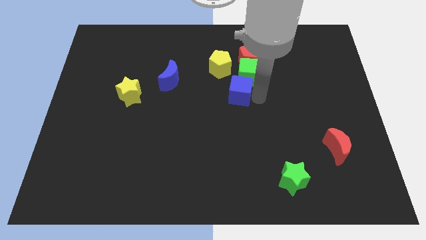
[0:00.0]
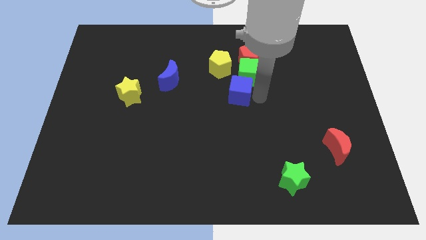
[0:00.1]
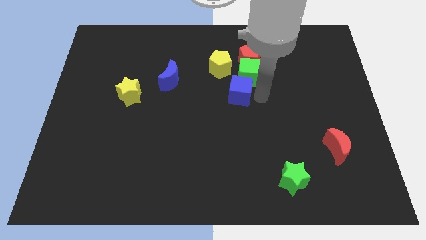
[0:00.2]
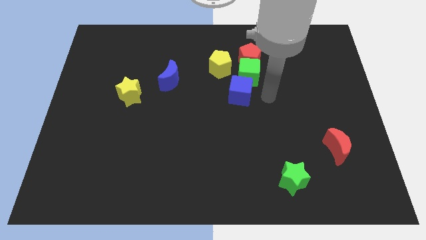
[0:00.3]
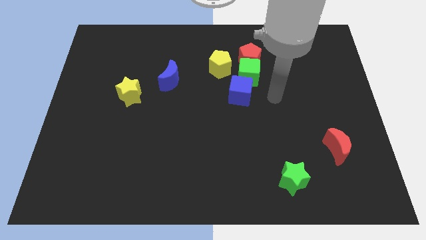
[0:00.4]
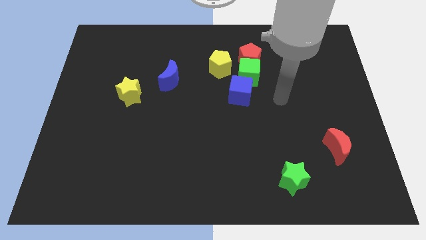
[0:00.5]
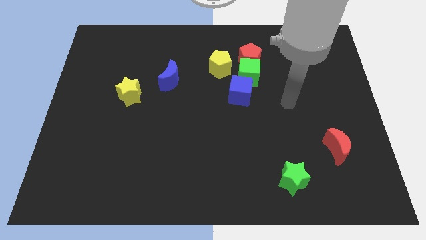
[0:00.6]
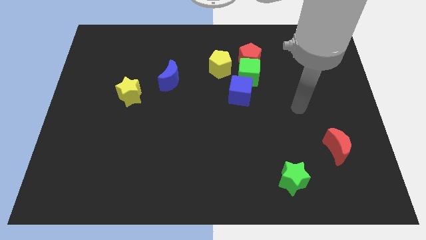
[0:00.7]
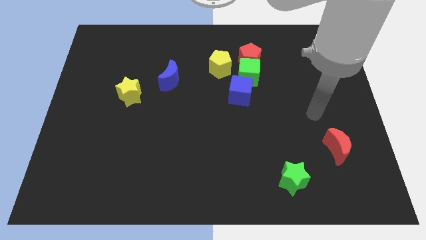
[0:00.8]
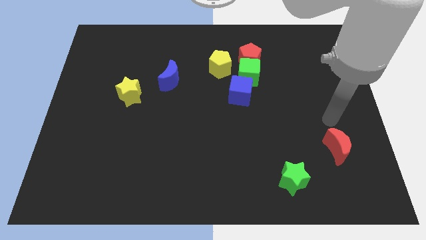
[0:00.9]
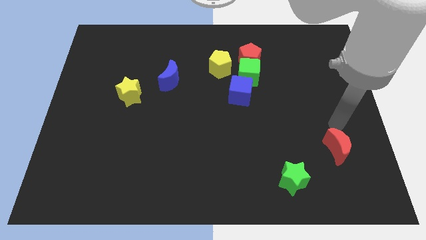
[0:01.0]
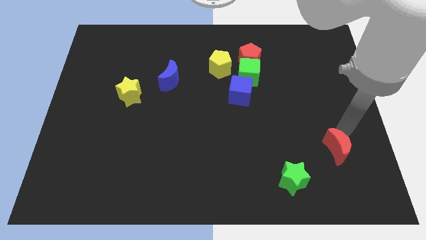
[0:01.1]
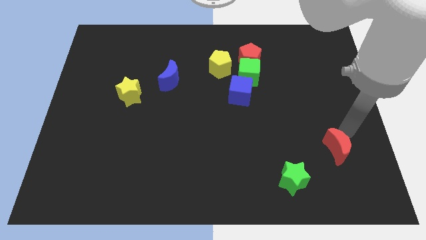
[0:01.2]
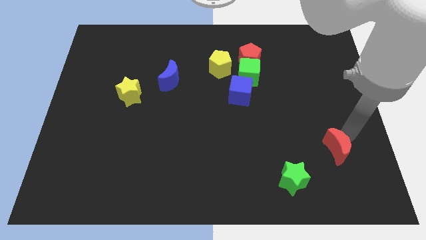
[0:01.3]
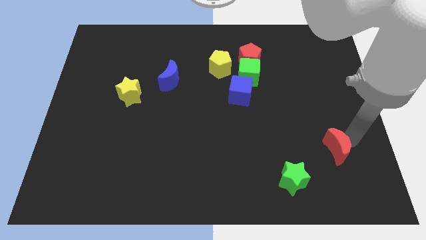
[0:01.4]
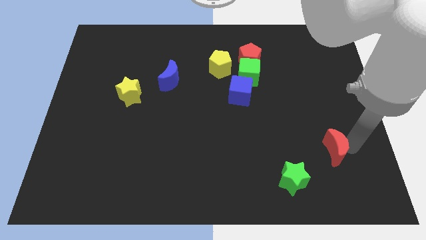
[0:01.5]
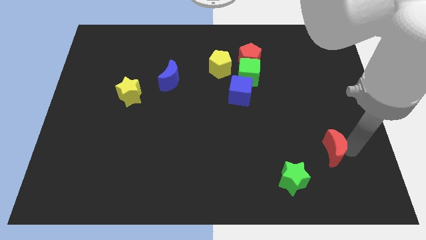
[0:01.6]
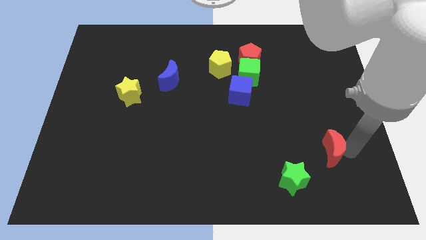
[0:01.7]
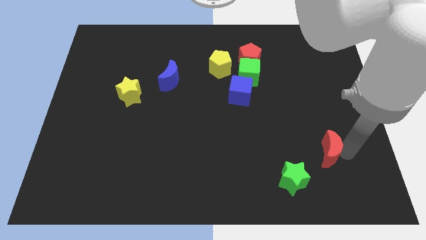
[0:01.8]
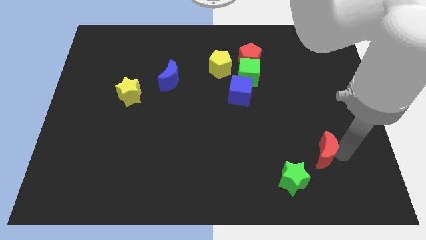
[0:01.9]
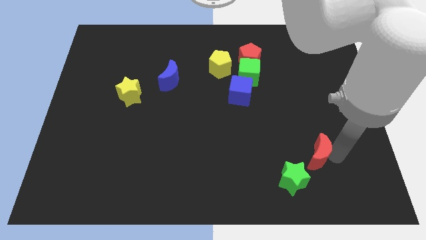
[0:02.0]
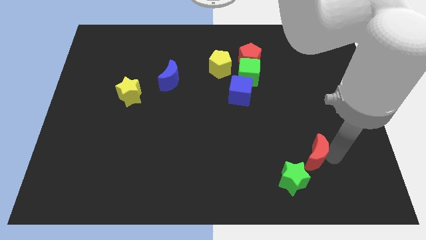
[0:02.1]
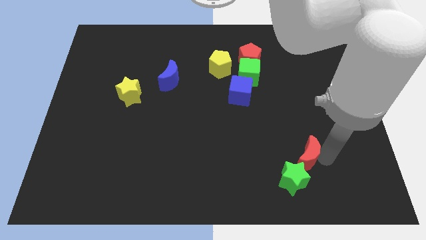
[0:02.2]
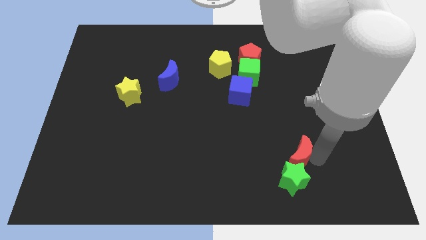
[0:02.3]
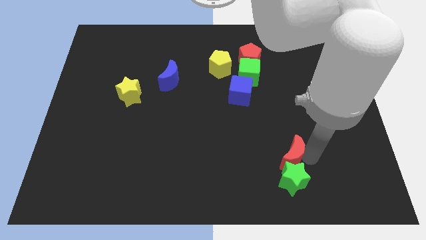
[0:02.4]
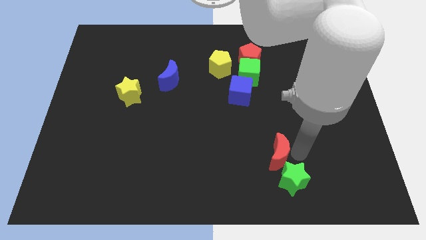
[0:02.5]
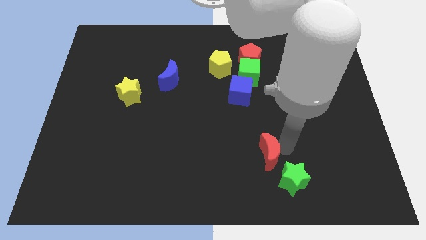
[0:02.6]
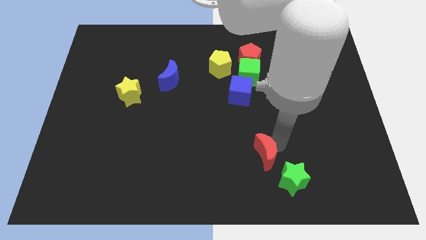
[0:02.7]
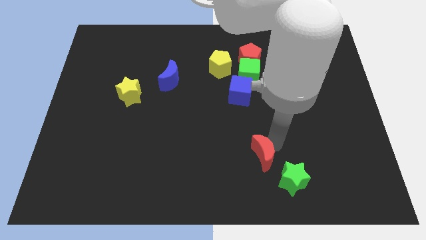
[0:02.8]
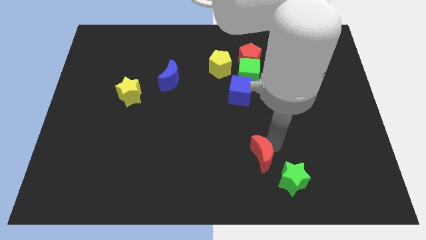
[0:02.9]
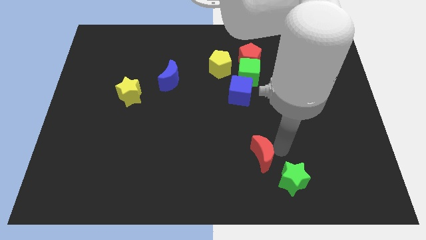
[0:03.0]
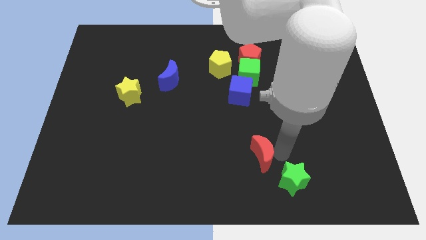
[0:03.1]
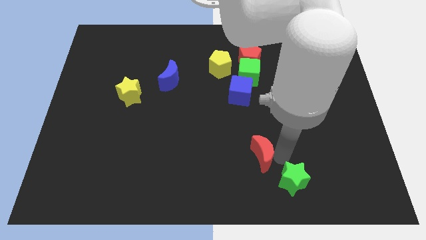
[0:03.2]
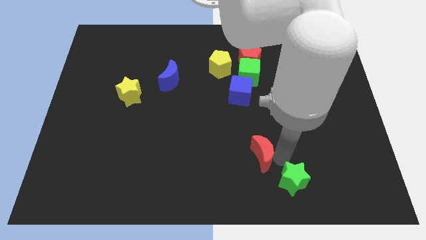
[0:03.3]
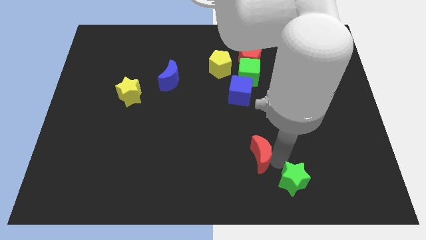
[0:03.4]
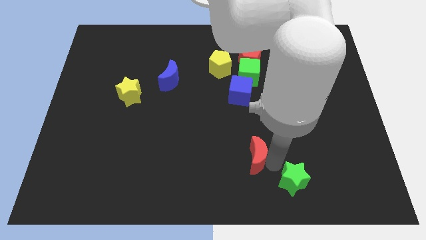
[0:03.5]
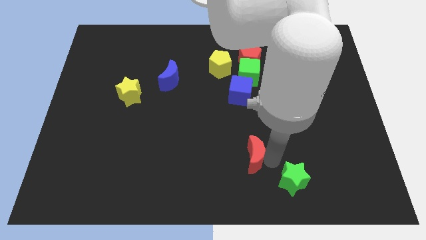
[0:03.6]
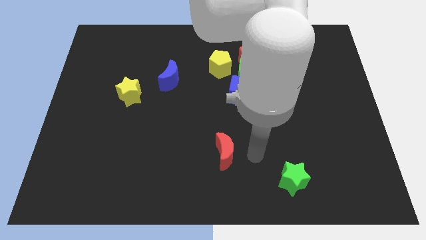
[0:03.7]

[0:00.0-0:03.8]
place the red moon below the blue cube

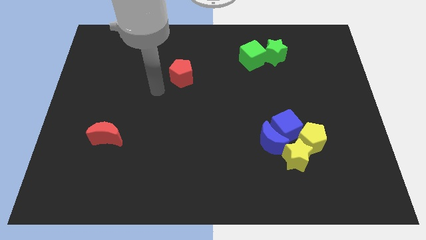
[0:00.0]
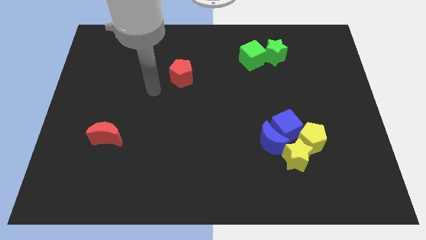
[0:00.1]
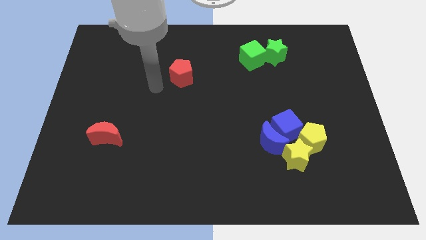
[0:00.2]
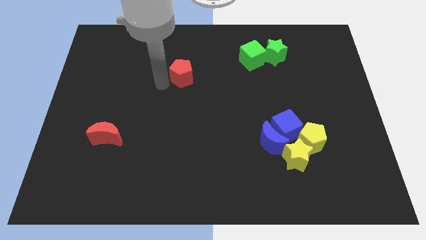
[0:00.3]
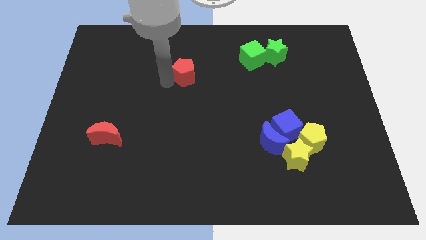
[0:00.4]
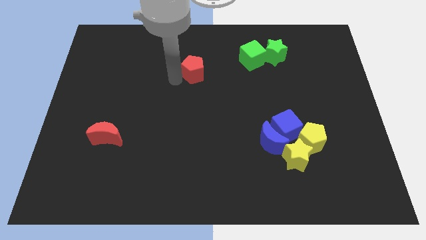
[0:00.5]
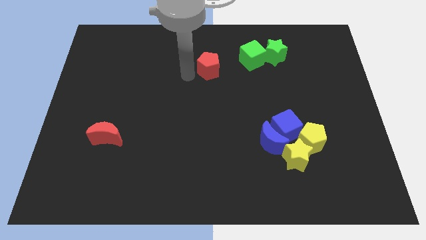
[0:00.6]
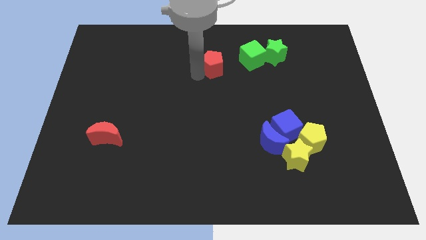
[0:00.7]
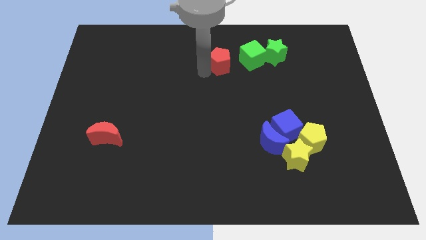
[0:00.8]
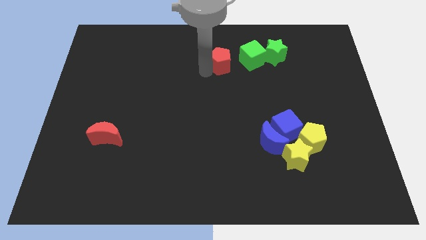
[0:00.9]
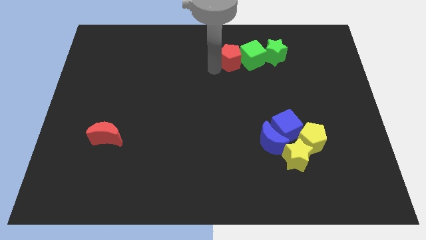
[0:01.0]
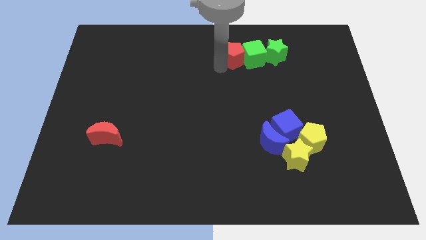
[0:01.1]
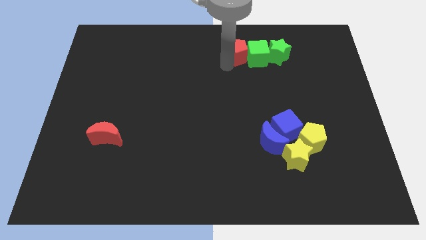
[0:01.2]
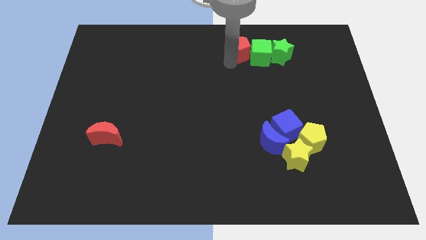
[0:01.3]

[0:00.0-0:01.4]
move the red pentagon parallel left to the green cube

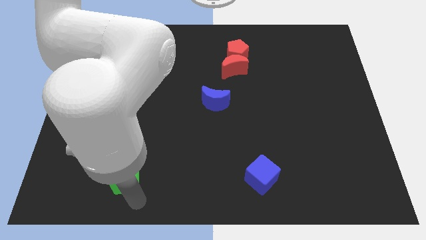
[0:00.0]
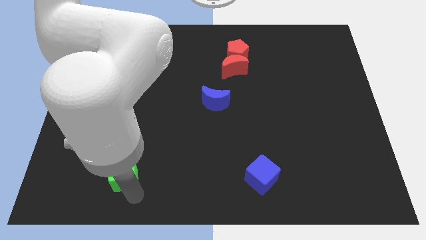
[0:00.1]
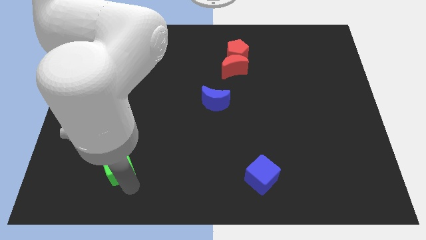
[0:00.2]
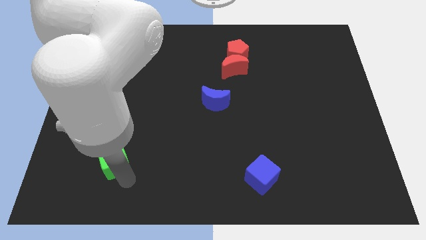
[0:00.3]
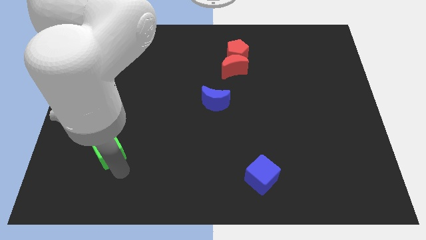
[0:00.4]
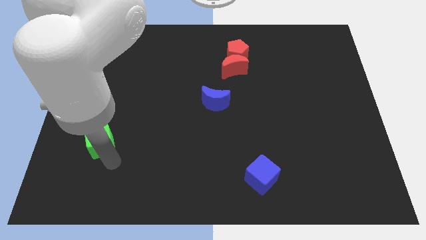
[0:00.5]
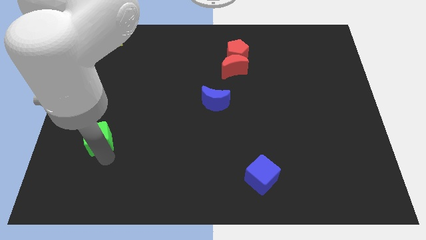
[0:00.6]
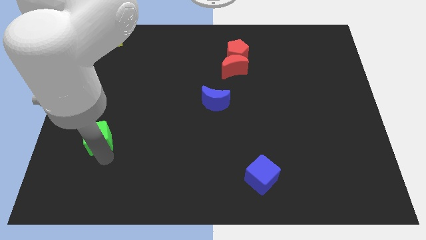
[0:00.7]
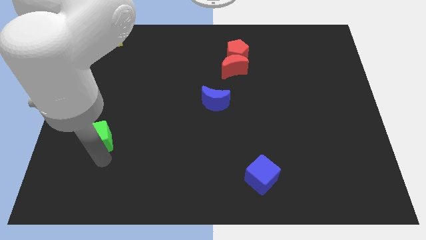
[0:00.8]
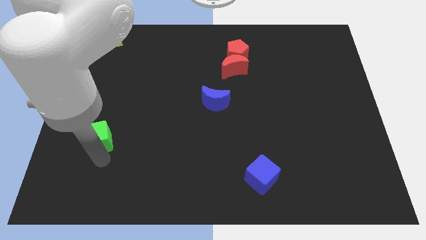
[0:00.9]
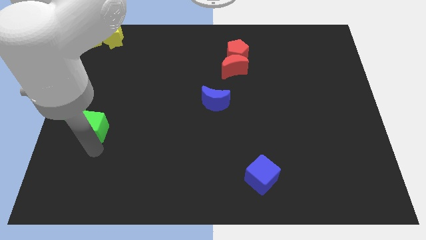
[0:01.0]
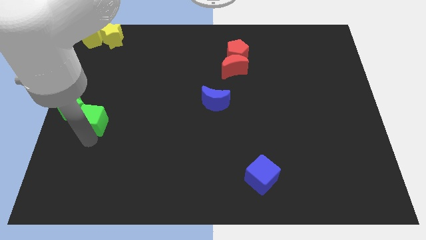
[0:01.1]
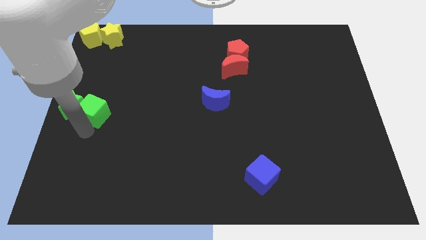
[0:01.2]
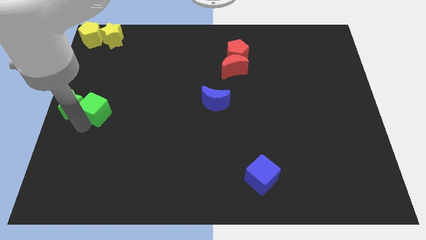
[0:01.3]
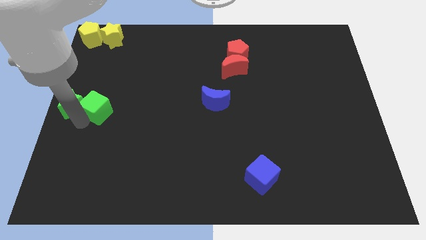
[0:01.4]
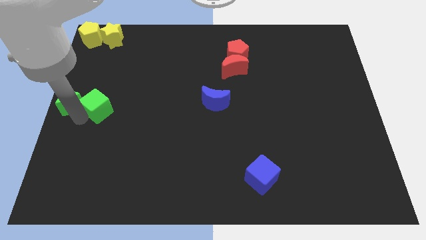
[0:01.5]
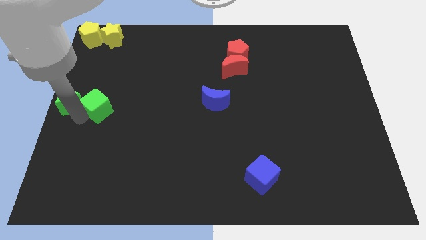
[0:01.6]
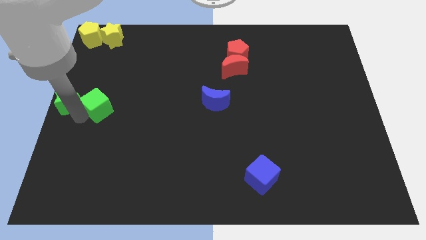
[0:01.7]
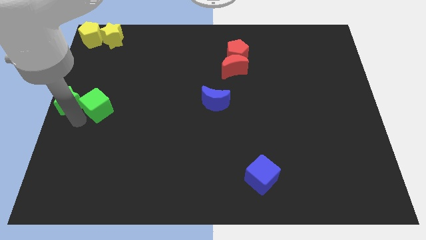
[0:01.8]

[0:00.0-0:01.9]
move the green cube to the right of green star

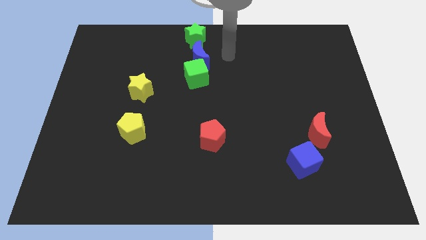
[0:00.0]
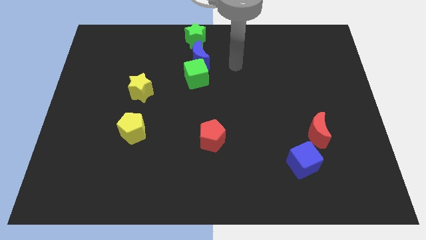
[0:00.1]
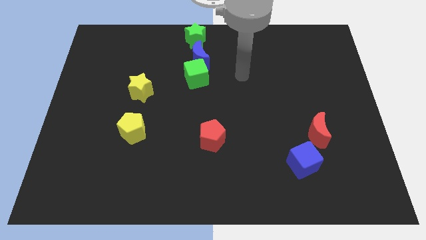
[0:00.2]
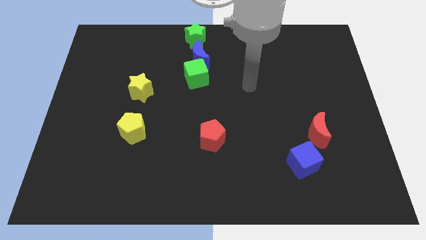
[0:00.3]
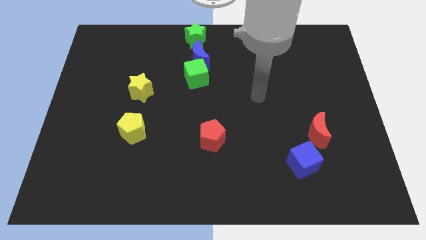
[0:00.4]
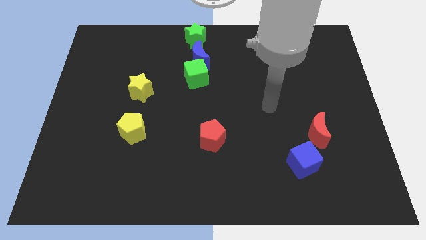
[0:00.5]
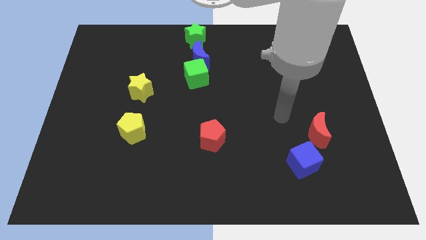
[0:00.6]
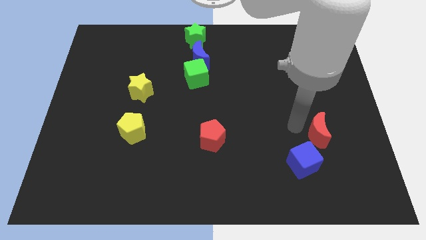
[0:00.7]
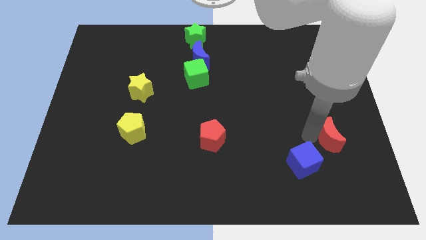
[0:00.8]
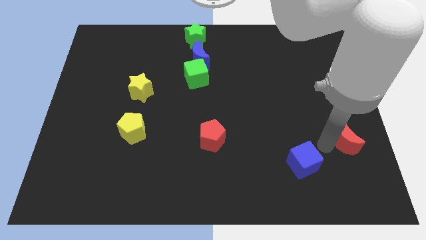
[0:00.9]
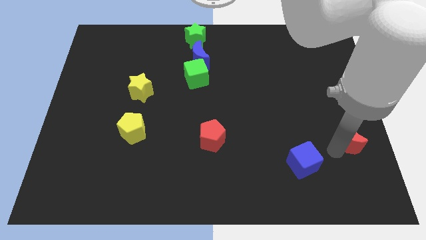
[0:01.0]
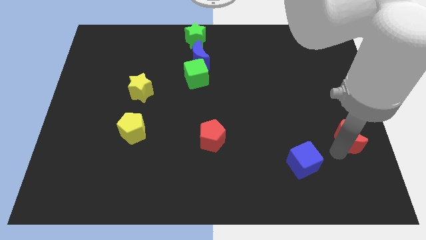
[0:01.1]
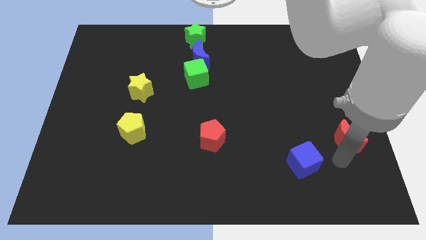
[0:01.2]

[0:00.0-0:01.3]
separate red moon from blue cube

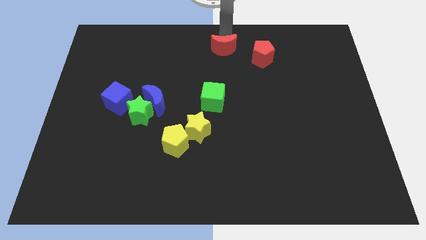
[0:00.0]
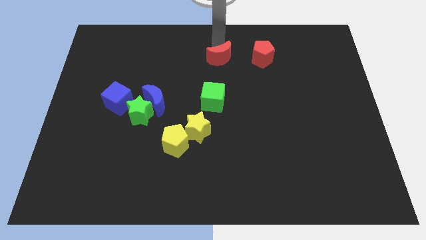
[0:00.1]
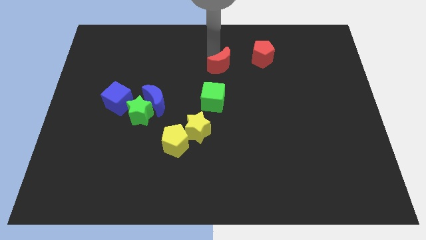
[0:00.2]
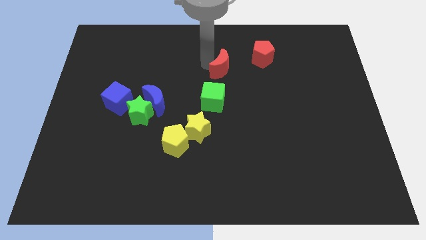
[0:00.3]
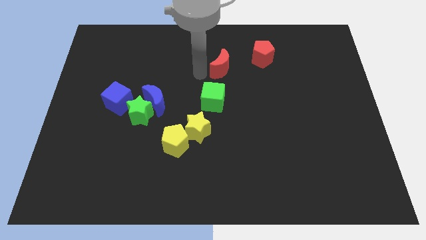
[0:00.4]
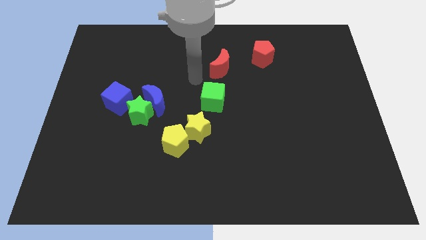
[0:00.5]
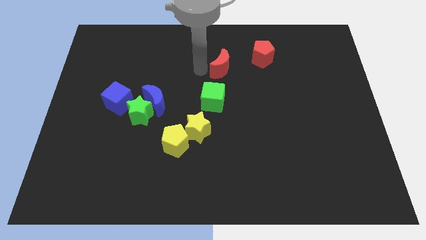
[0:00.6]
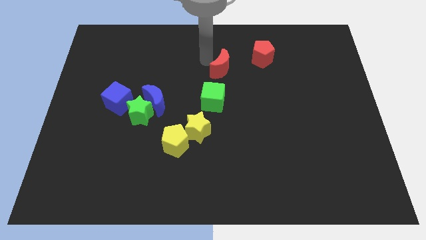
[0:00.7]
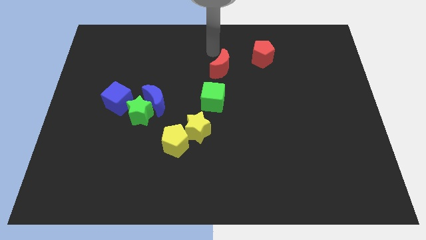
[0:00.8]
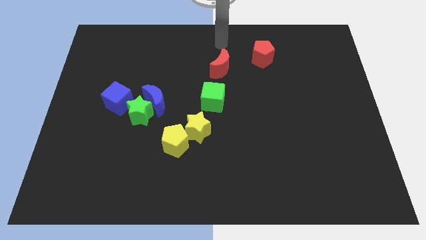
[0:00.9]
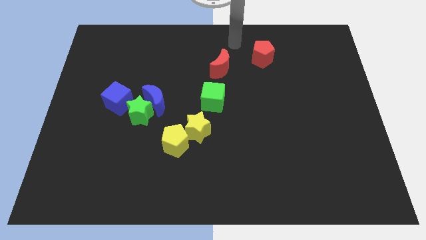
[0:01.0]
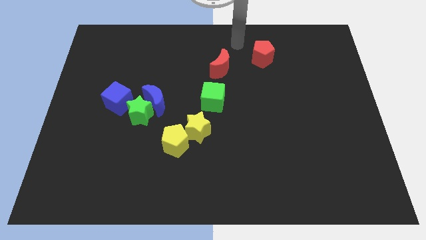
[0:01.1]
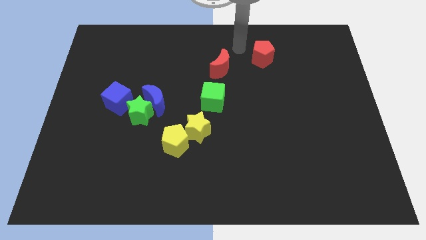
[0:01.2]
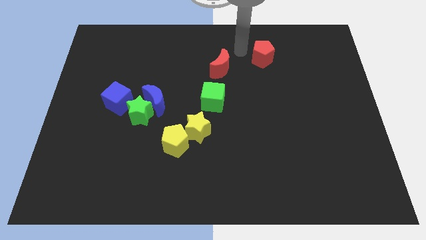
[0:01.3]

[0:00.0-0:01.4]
move the red crescent slightly towards the green cube
